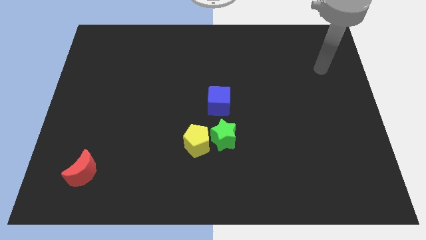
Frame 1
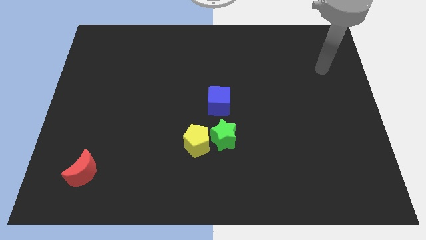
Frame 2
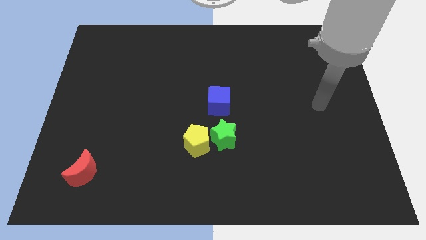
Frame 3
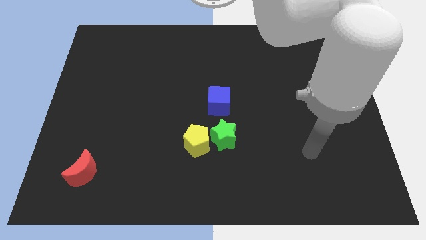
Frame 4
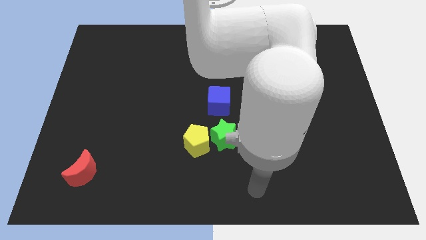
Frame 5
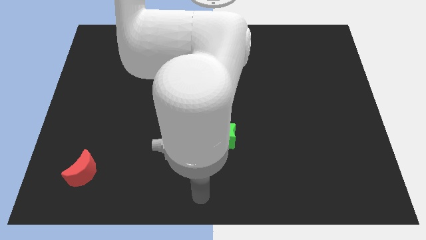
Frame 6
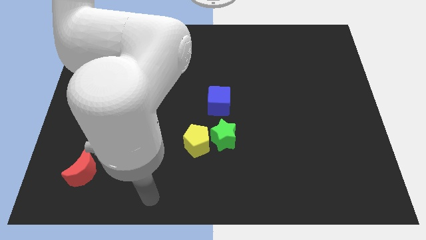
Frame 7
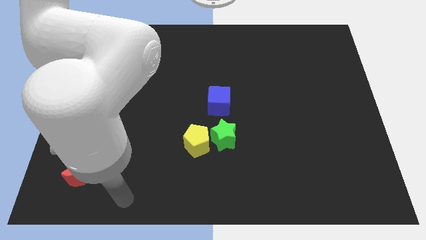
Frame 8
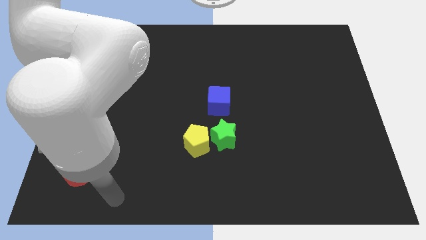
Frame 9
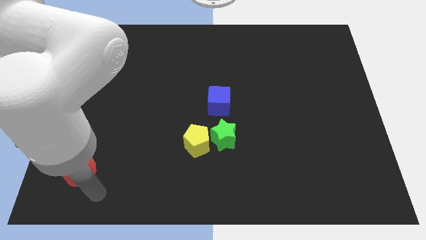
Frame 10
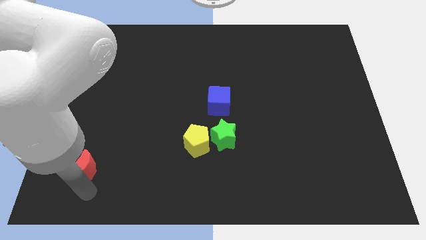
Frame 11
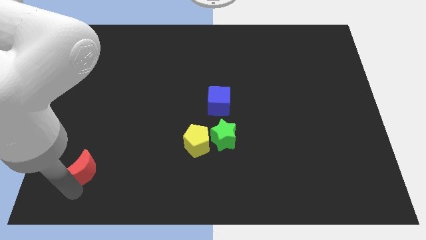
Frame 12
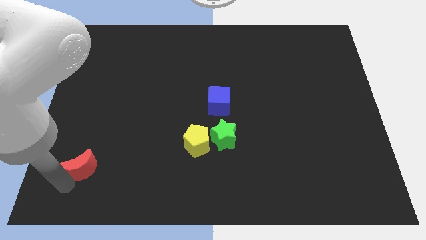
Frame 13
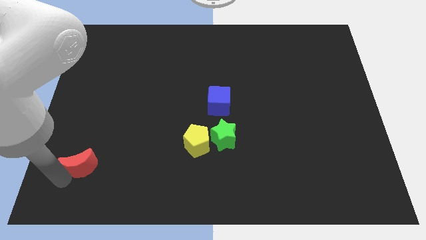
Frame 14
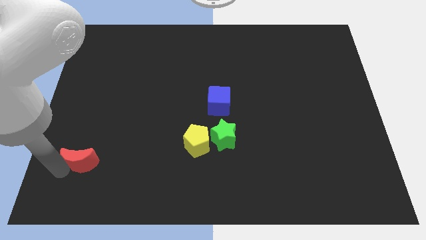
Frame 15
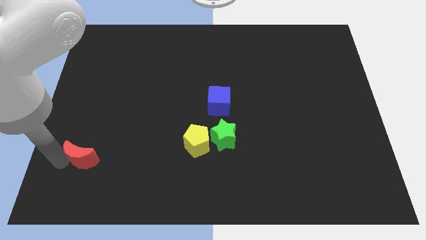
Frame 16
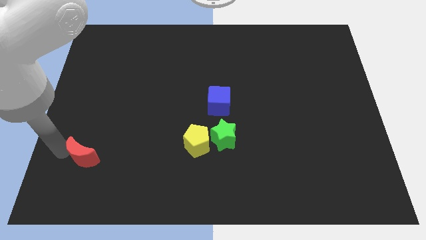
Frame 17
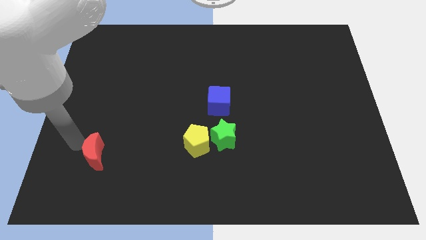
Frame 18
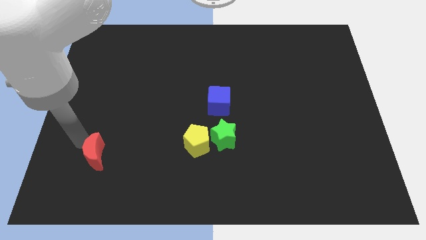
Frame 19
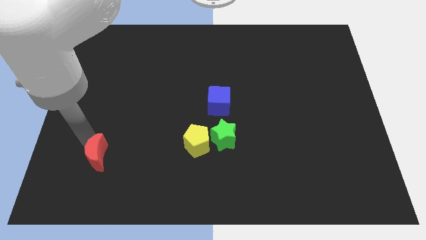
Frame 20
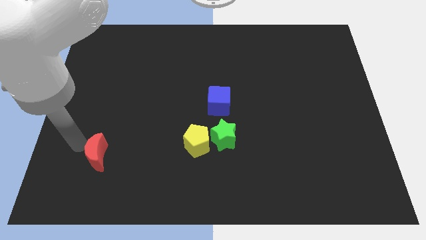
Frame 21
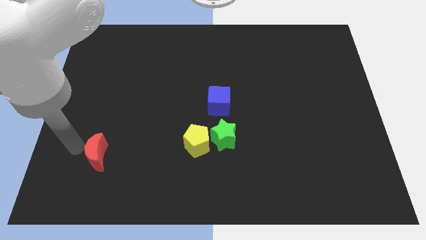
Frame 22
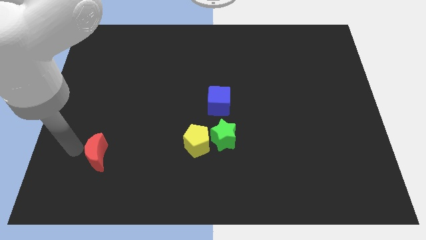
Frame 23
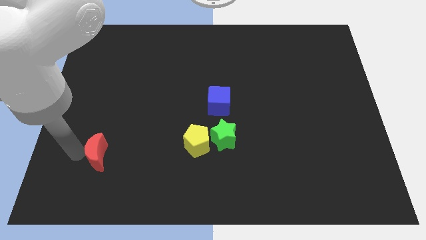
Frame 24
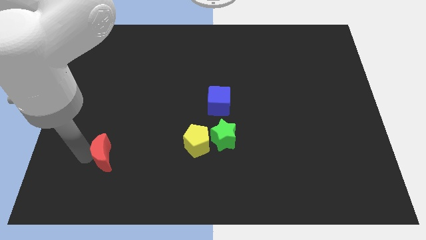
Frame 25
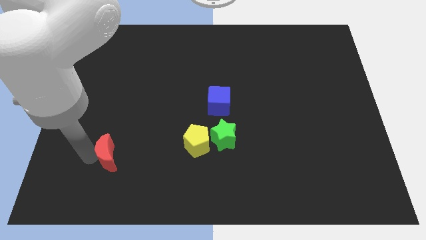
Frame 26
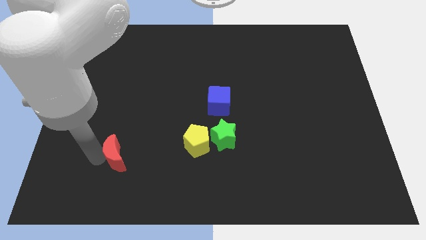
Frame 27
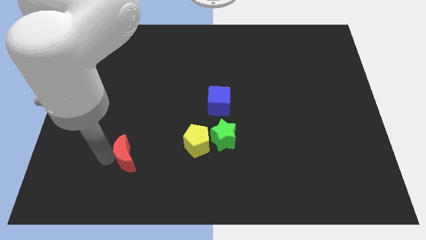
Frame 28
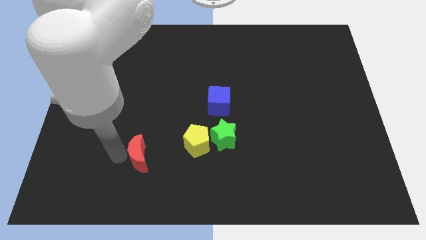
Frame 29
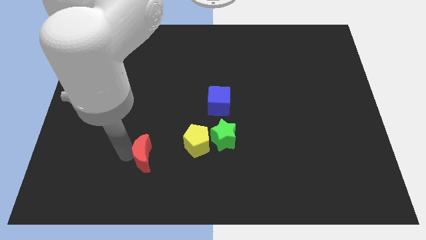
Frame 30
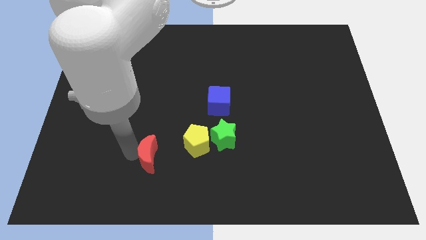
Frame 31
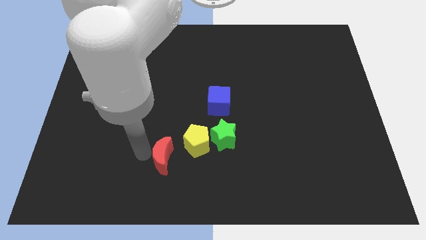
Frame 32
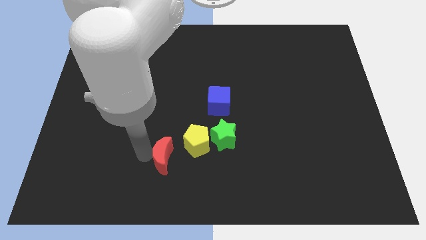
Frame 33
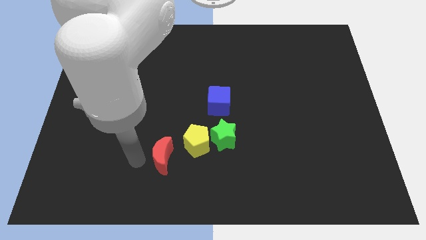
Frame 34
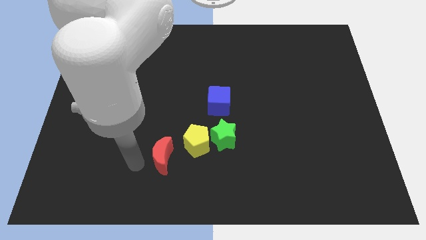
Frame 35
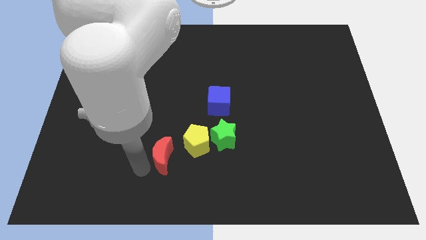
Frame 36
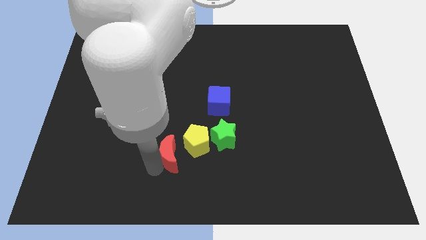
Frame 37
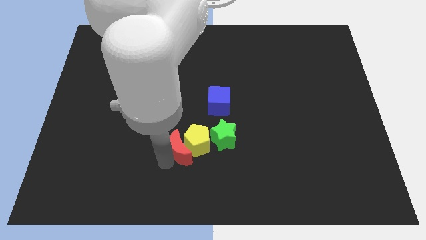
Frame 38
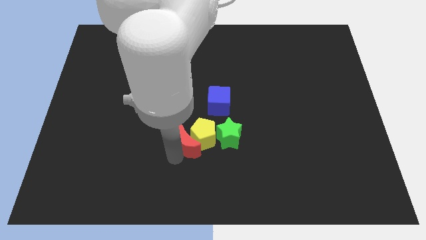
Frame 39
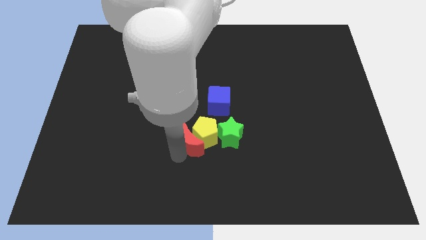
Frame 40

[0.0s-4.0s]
put the red block towards the pentagon

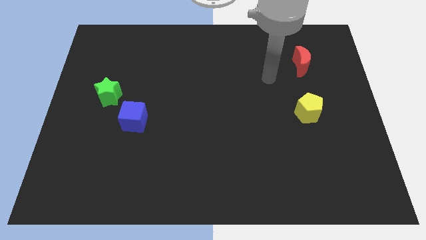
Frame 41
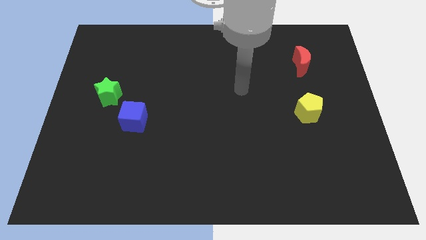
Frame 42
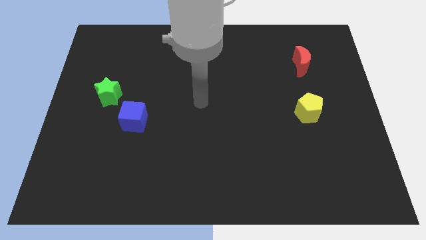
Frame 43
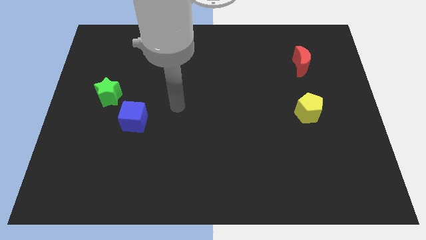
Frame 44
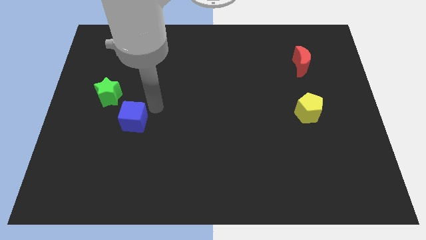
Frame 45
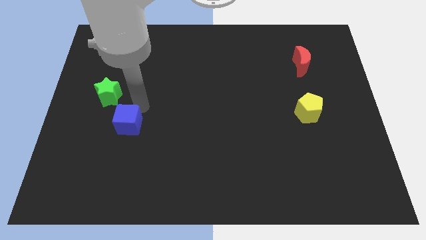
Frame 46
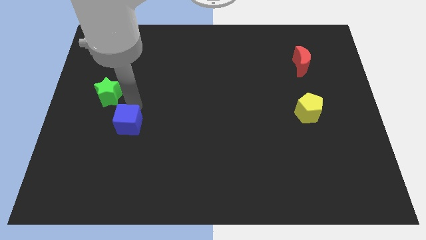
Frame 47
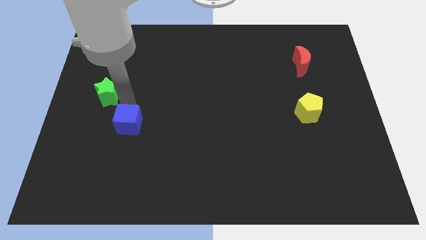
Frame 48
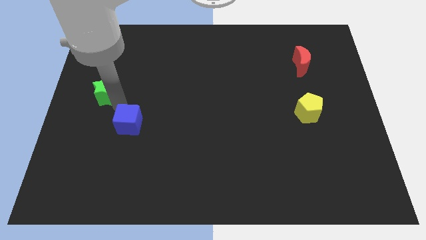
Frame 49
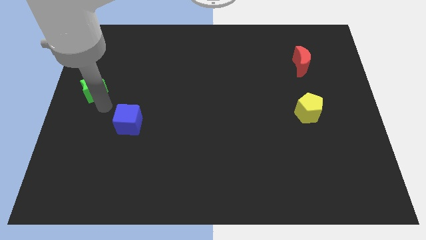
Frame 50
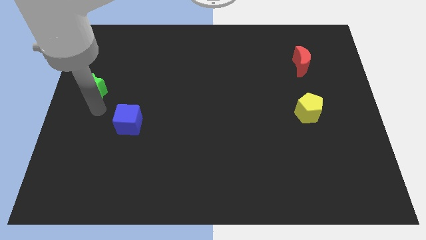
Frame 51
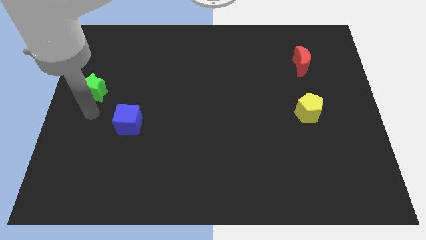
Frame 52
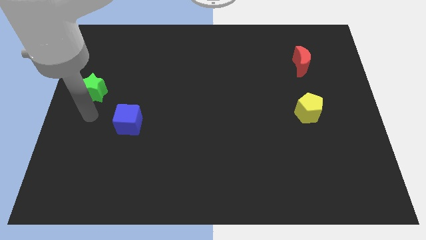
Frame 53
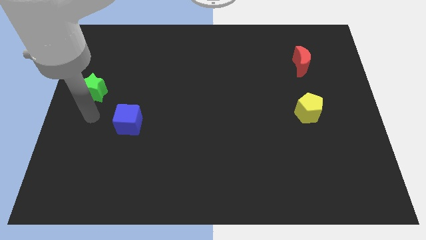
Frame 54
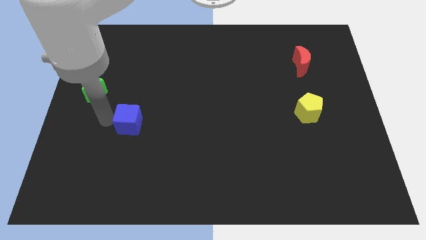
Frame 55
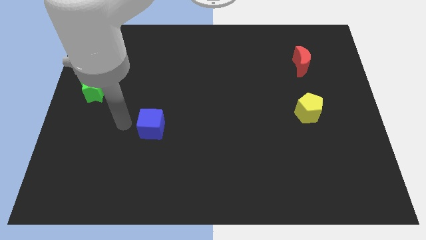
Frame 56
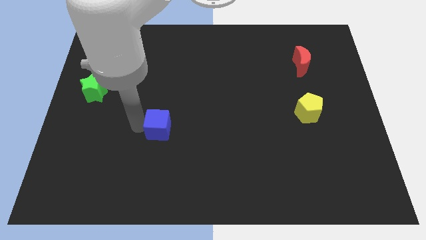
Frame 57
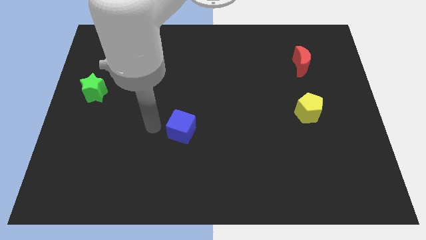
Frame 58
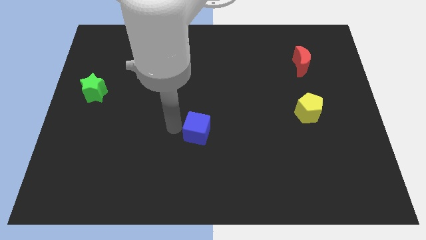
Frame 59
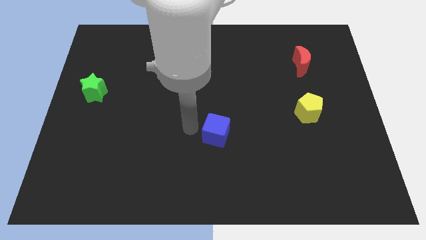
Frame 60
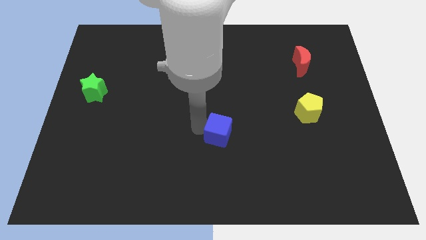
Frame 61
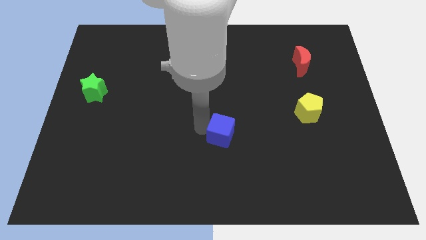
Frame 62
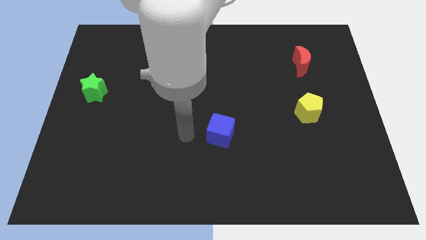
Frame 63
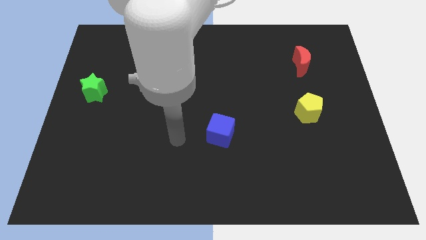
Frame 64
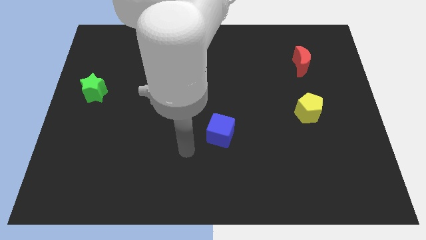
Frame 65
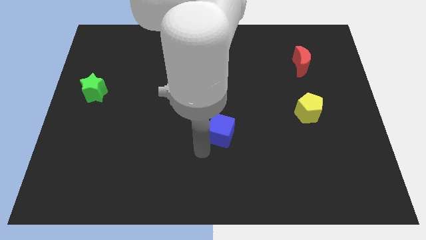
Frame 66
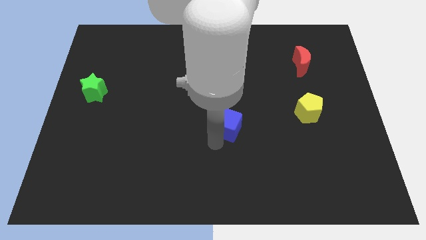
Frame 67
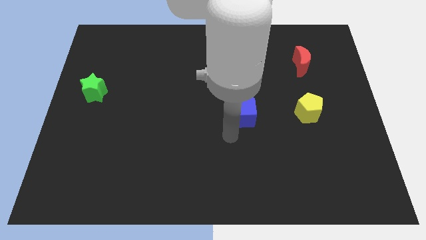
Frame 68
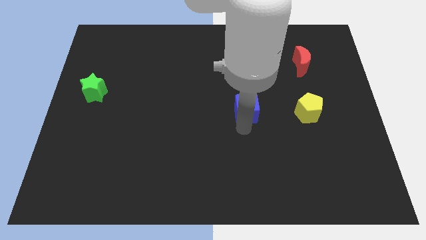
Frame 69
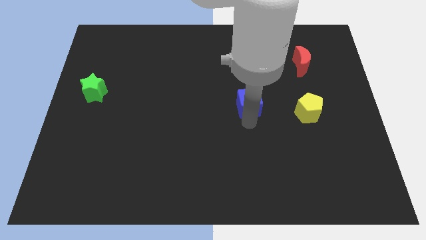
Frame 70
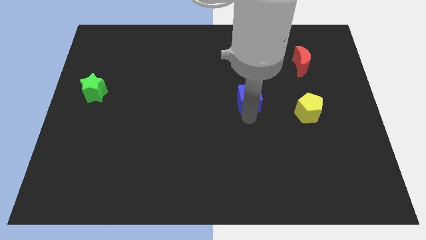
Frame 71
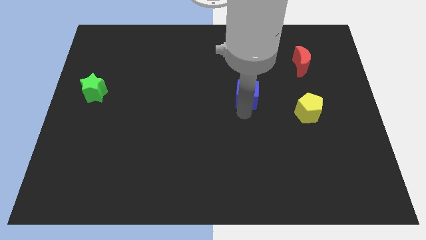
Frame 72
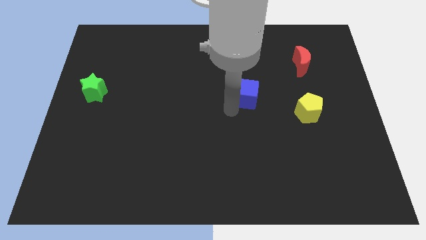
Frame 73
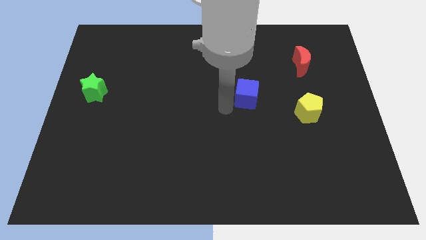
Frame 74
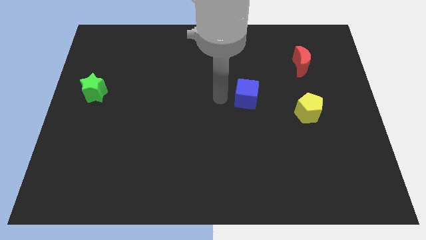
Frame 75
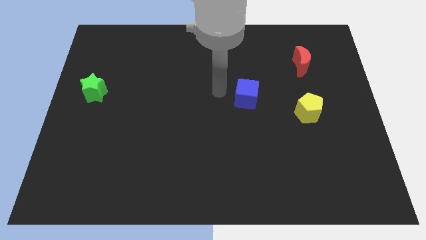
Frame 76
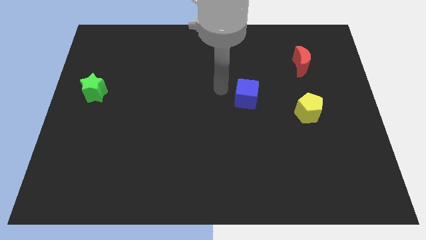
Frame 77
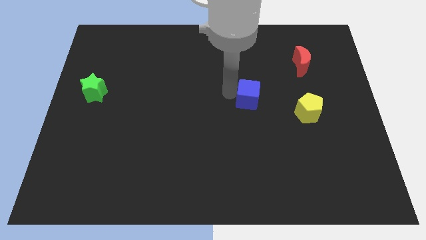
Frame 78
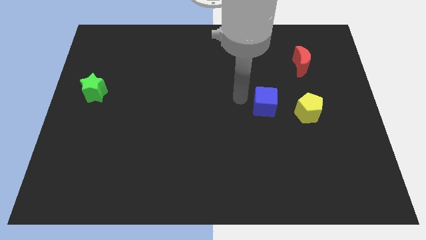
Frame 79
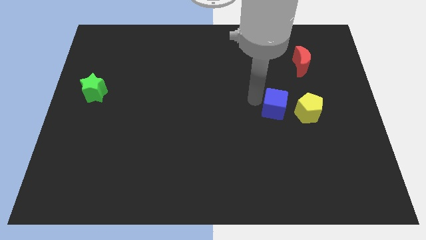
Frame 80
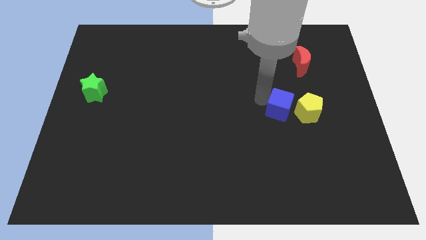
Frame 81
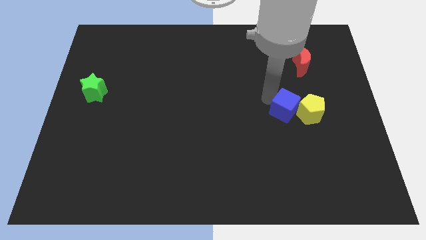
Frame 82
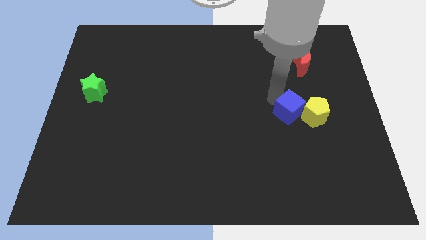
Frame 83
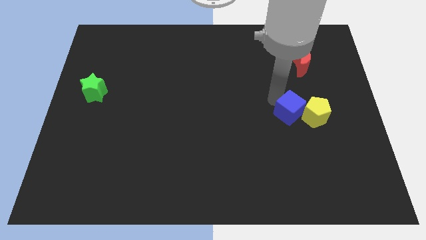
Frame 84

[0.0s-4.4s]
move the blue block towards the pentagon
